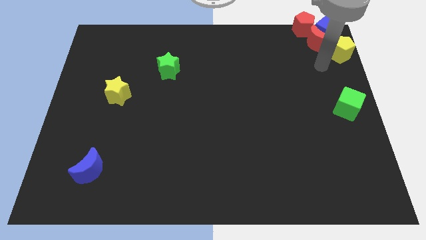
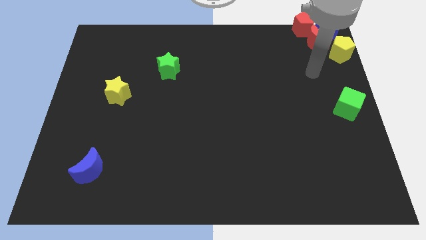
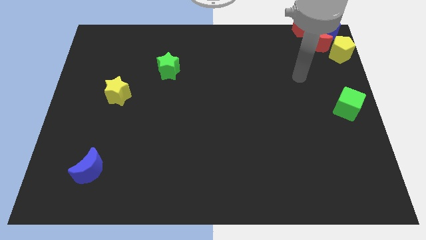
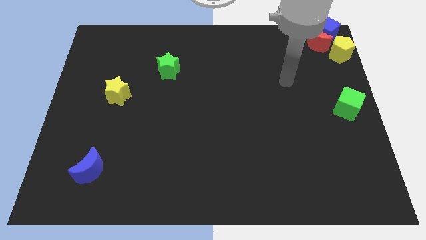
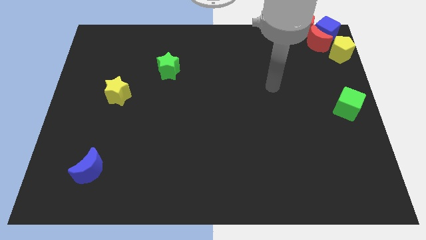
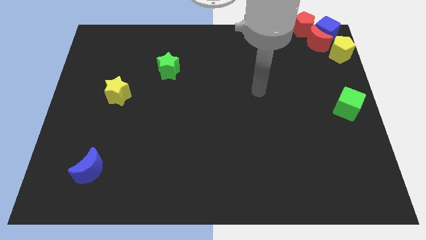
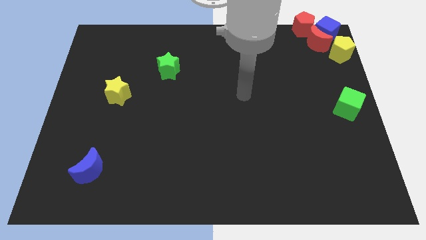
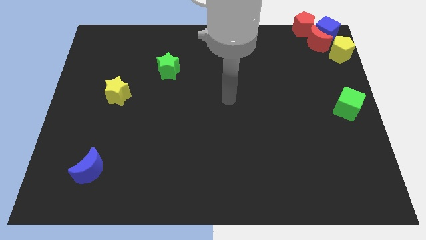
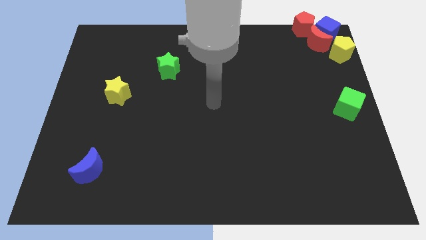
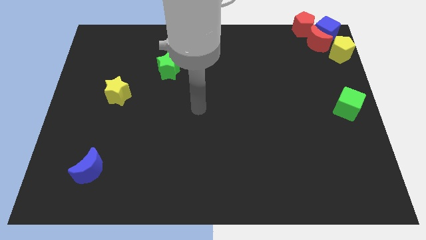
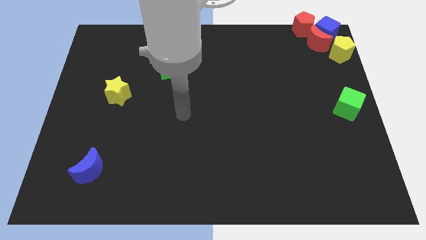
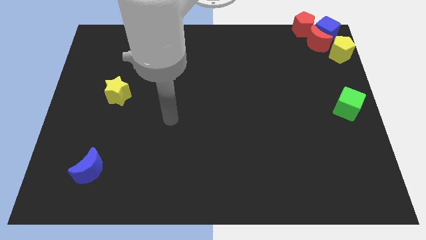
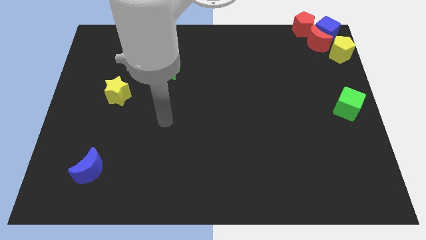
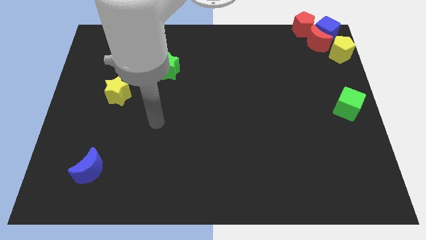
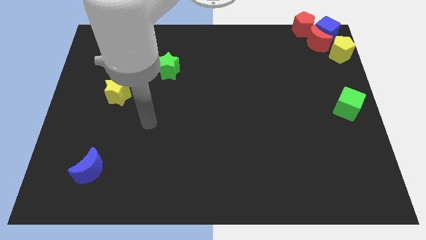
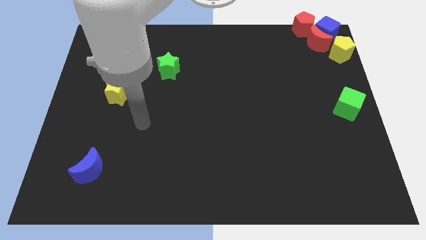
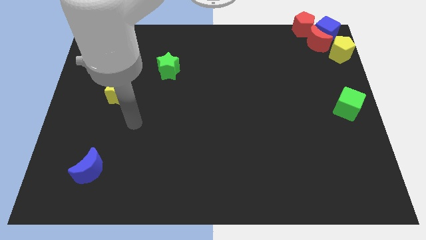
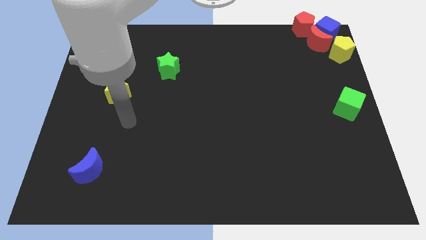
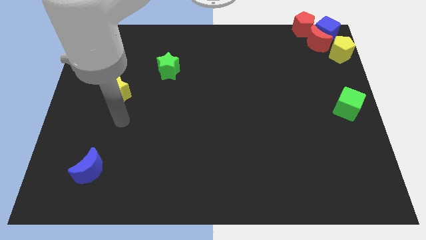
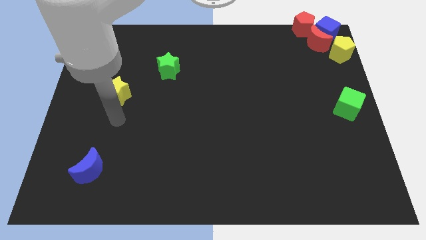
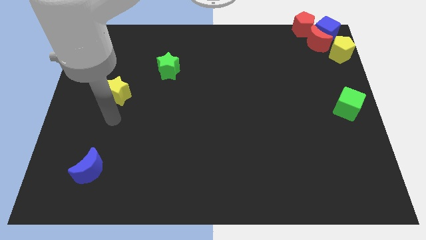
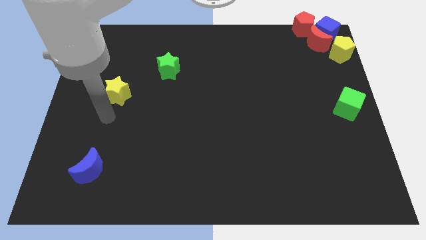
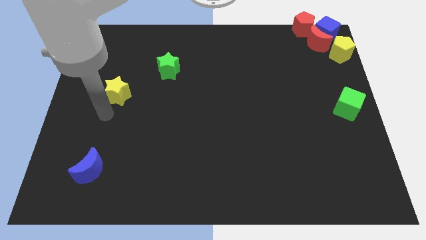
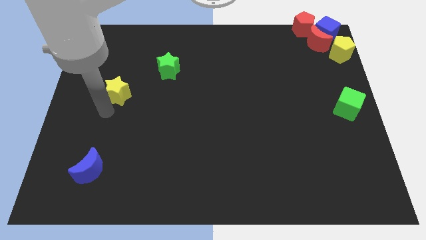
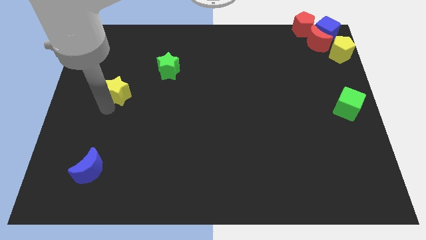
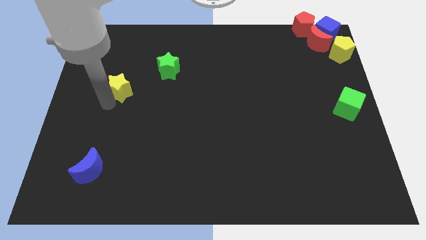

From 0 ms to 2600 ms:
move the arm diagonally to the yellow star

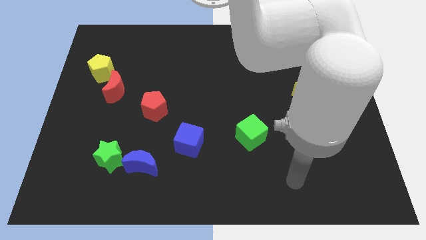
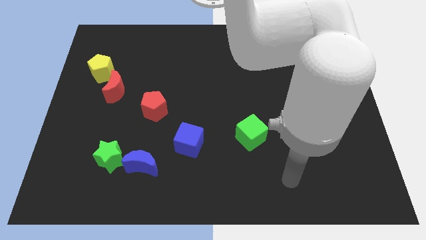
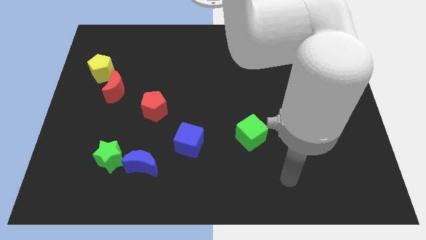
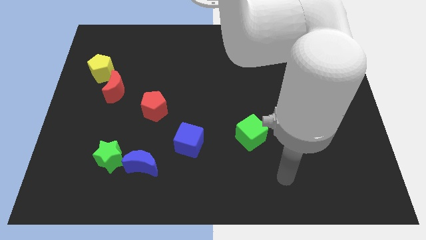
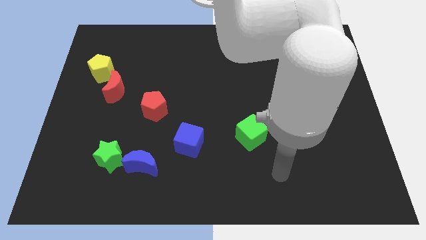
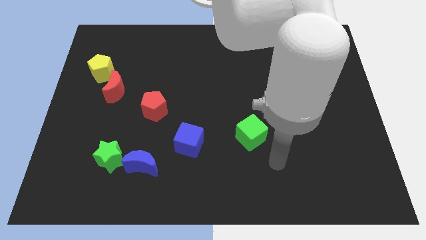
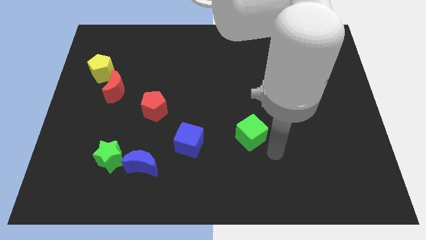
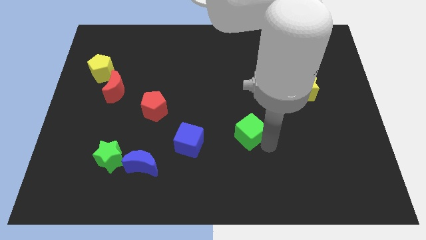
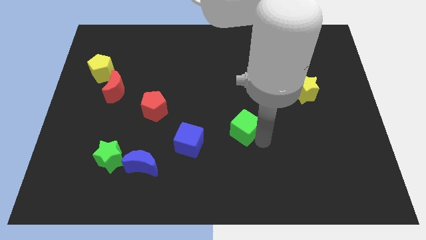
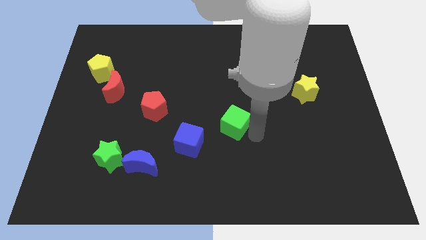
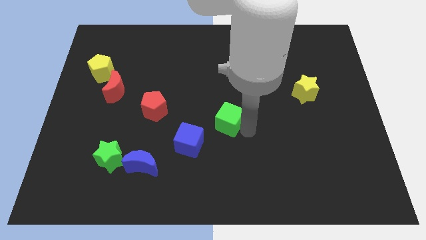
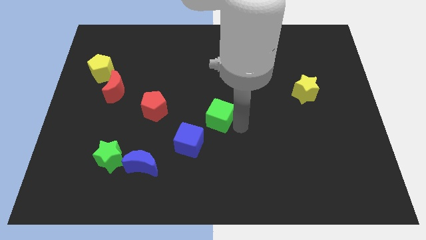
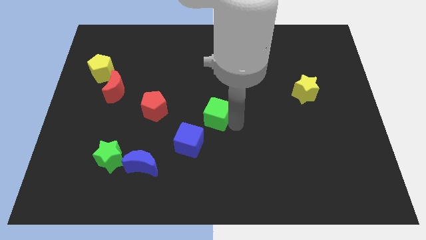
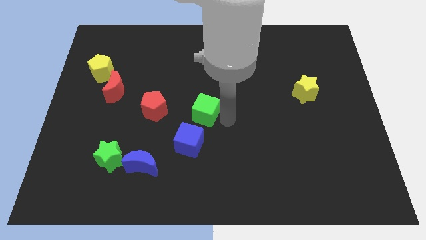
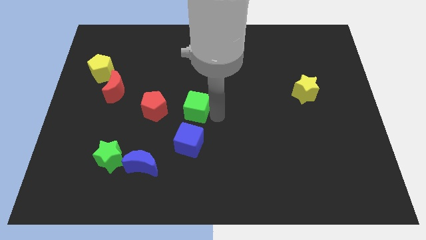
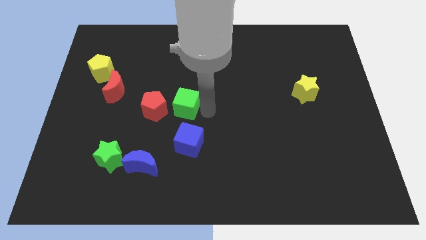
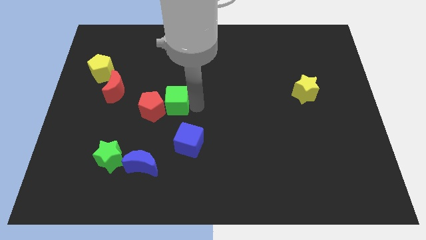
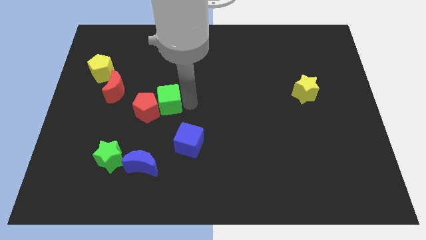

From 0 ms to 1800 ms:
push the green cube into red pentagon

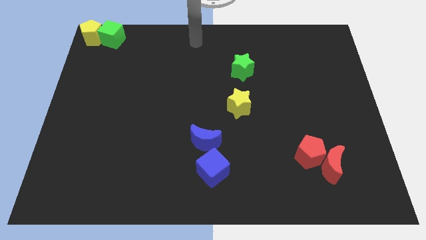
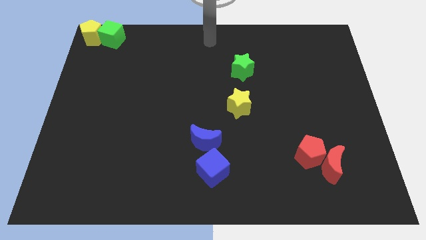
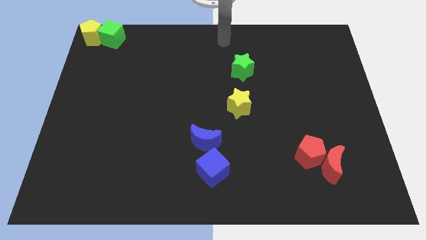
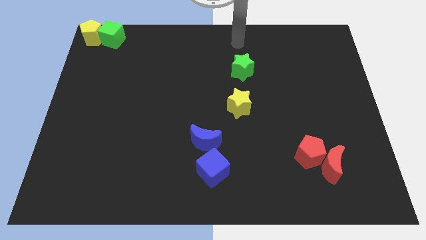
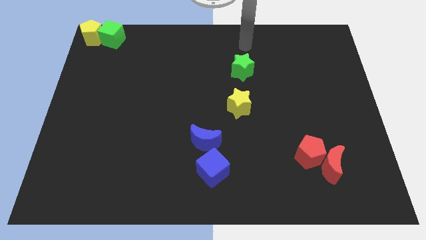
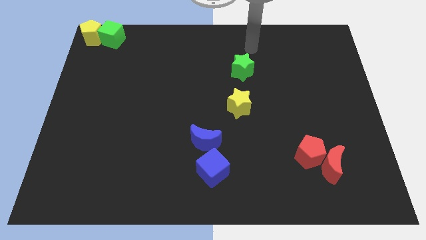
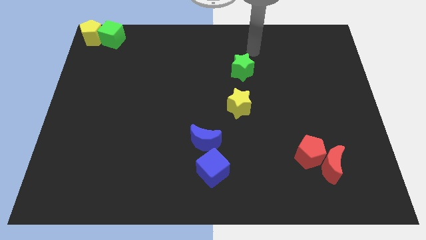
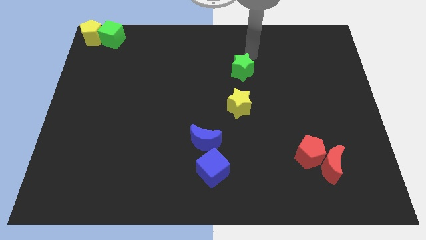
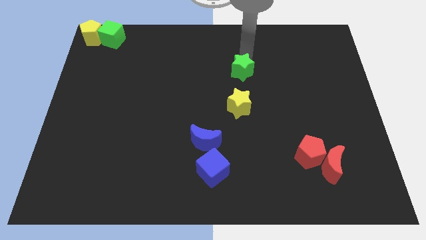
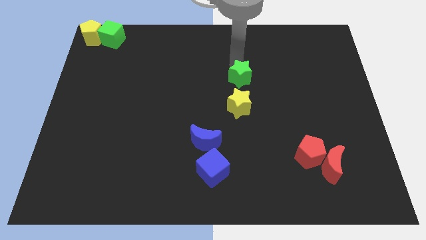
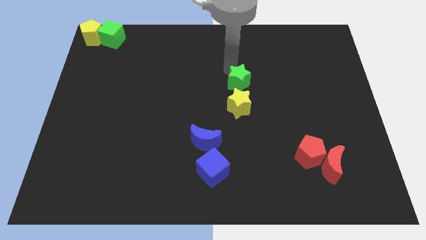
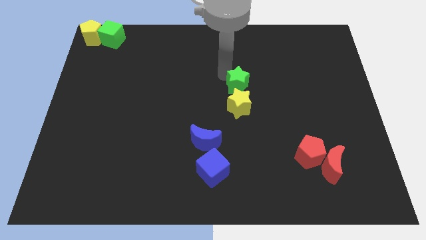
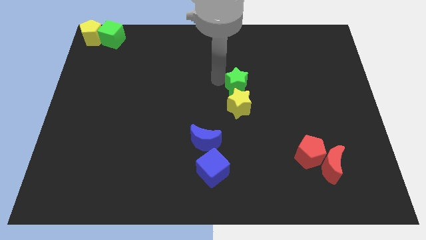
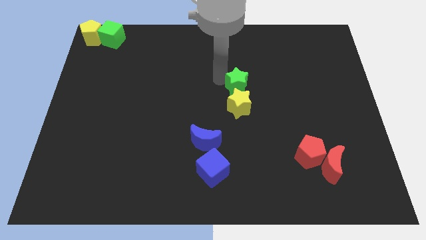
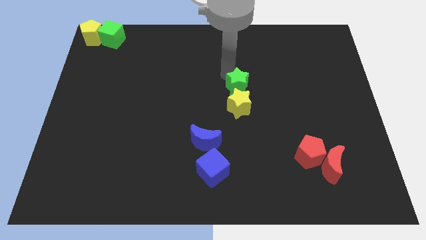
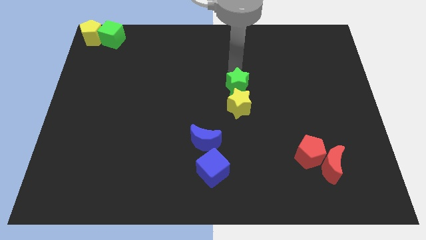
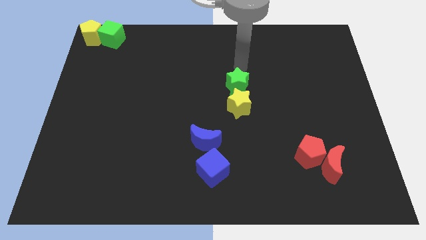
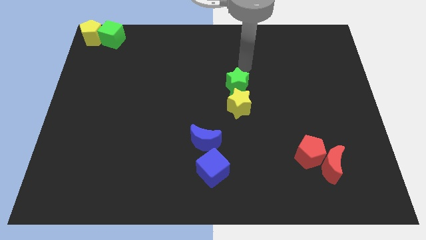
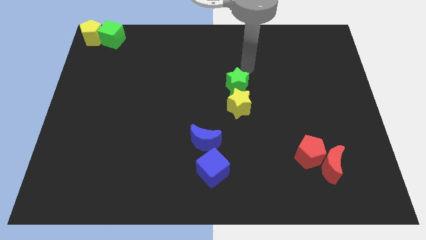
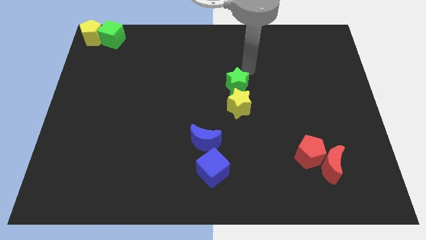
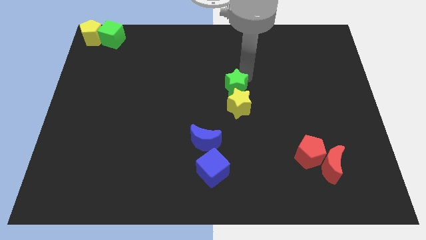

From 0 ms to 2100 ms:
move green star close to yellow star

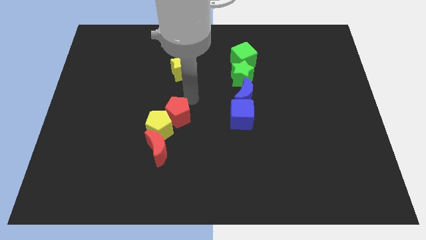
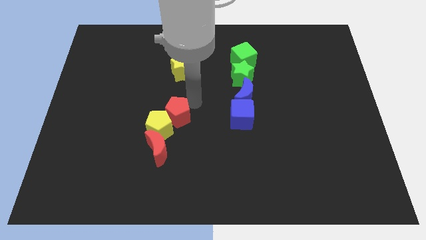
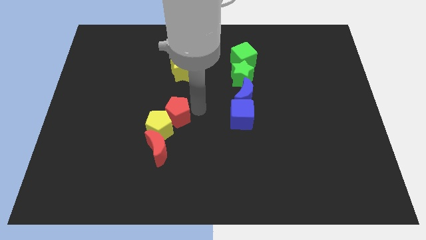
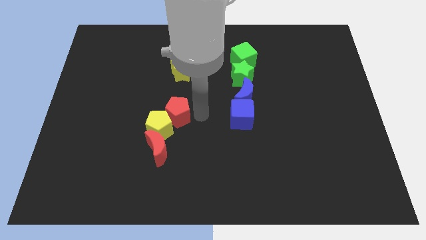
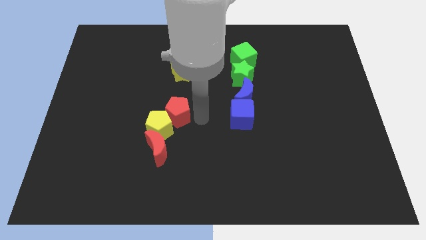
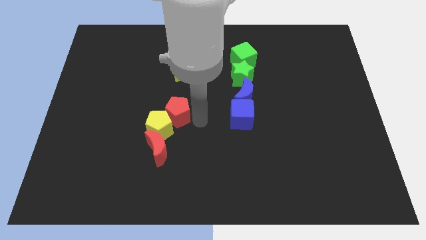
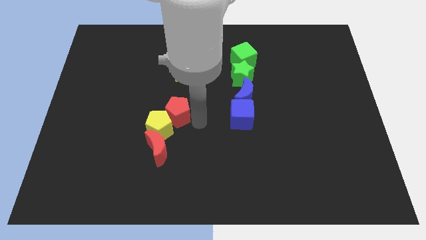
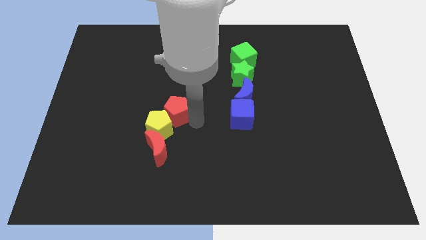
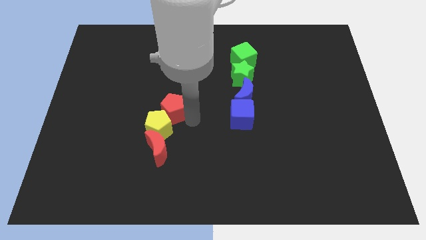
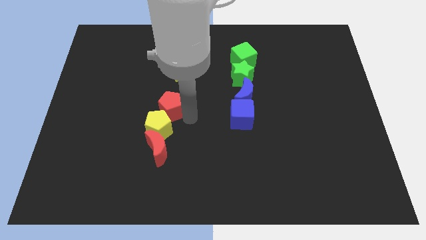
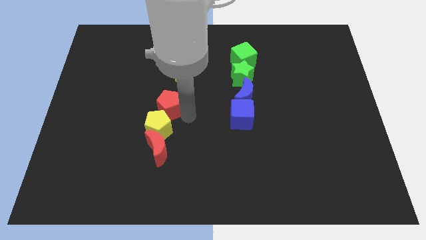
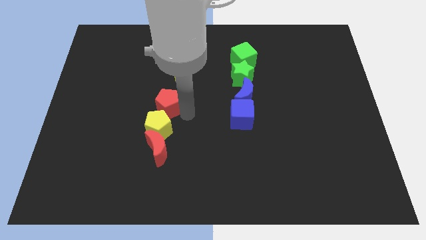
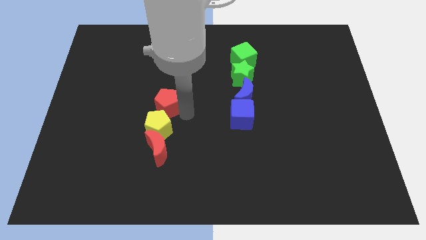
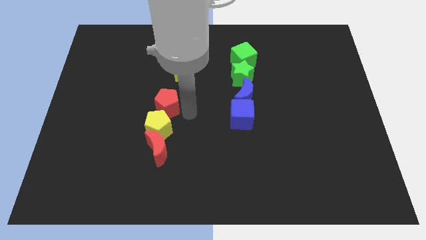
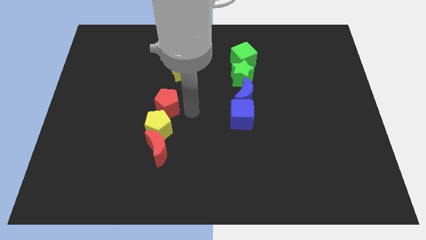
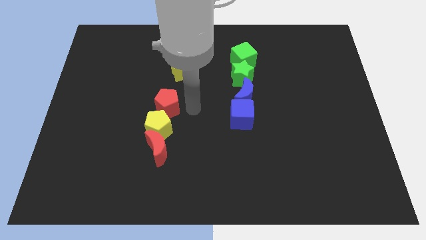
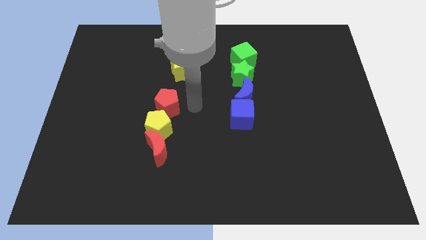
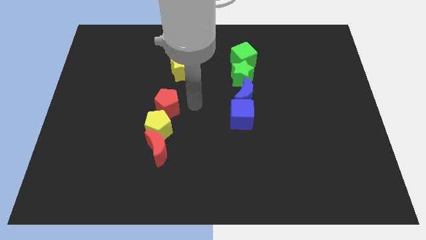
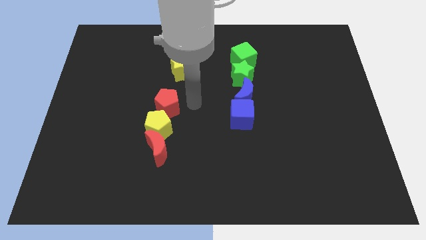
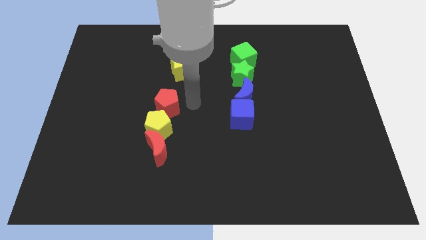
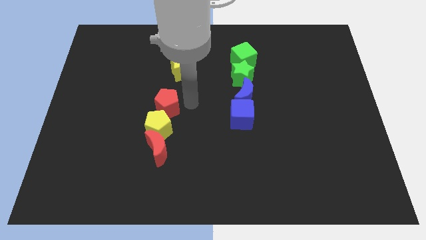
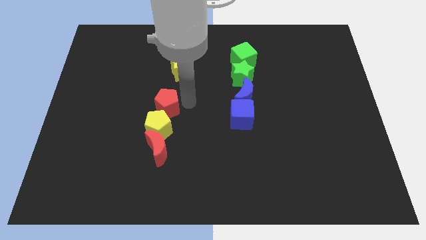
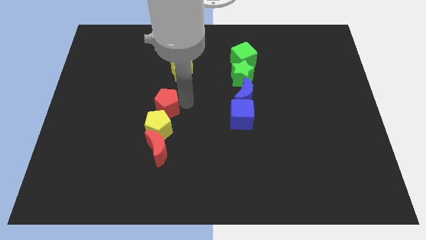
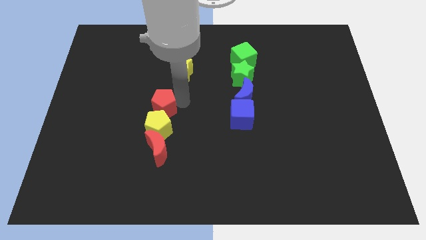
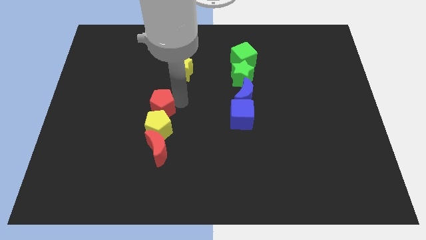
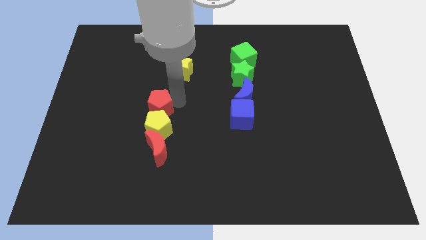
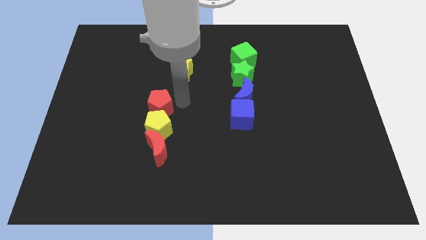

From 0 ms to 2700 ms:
push the red pentagon to the top of the yellow pentagon
